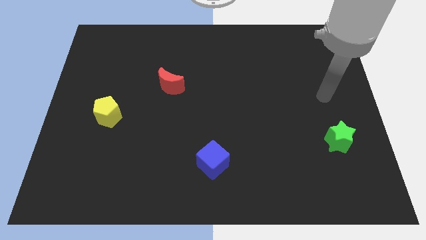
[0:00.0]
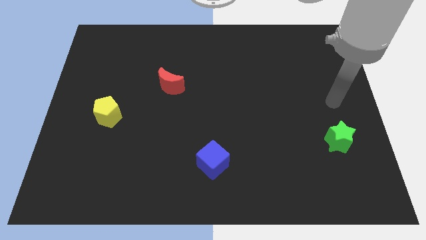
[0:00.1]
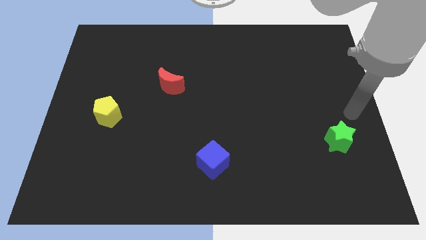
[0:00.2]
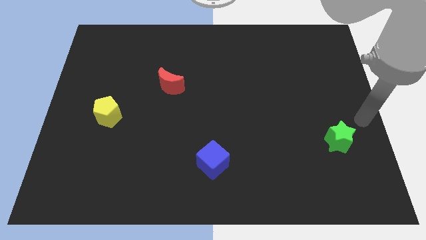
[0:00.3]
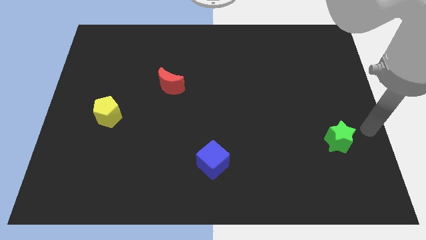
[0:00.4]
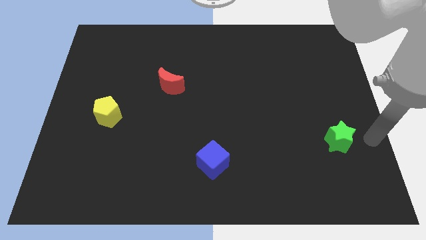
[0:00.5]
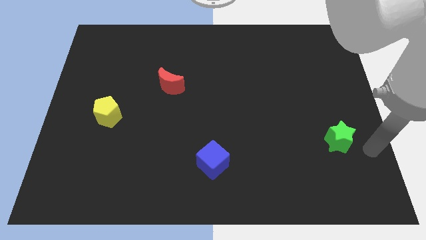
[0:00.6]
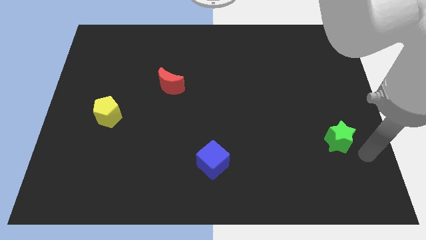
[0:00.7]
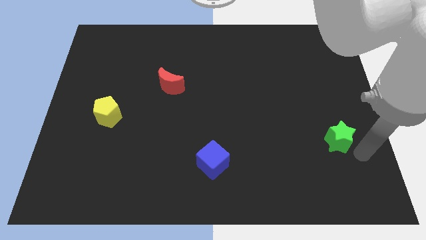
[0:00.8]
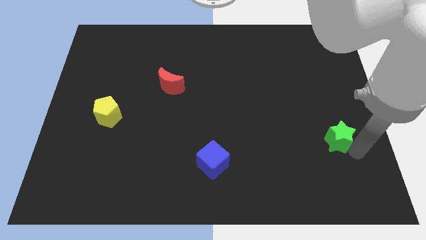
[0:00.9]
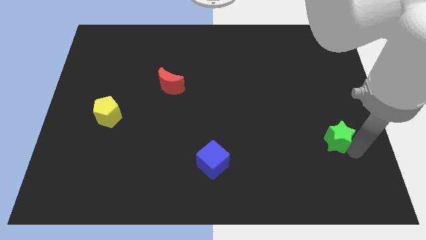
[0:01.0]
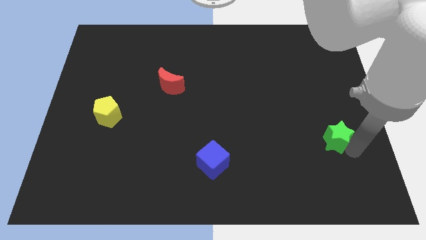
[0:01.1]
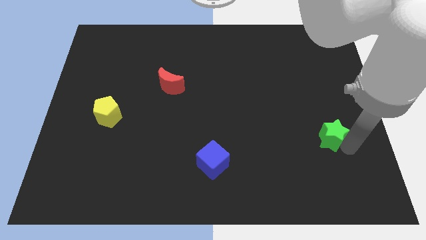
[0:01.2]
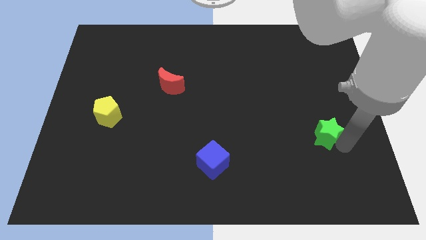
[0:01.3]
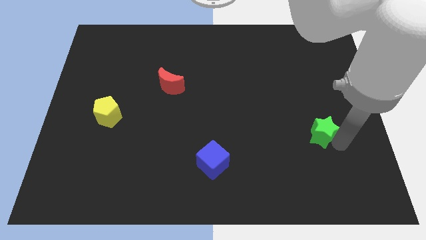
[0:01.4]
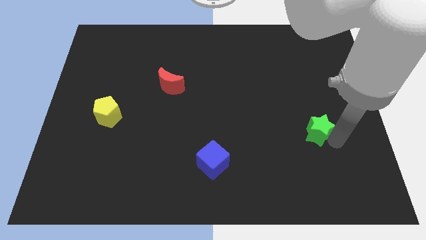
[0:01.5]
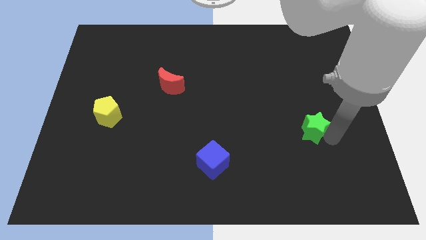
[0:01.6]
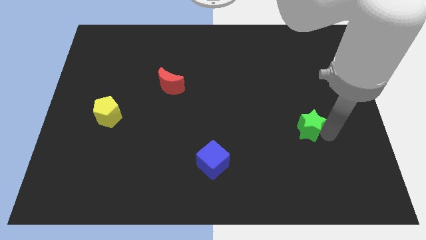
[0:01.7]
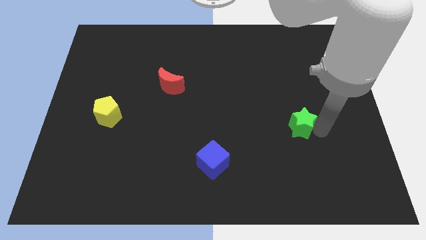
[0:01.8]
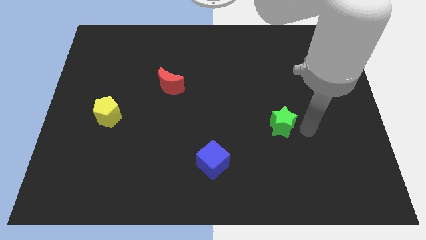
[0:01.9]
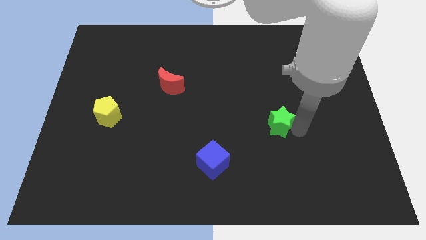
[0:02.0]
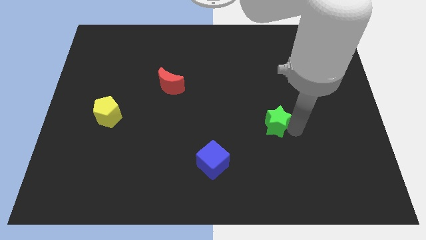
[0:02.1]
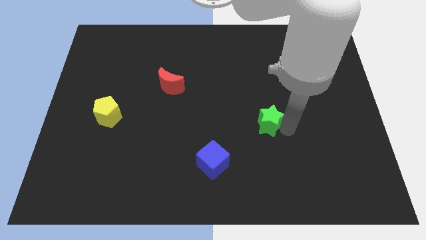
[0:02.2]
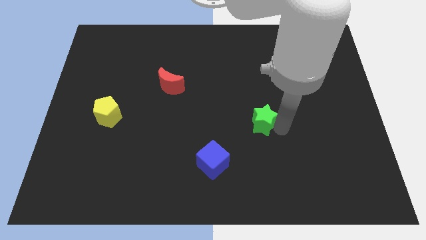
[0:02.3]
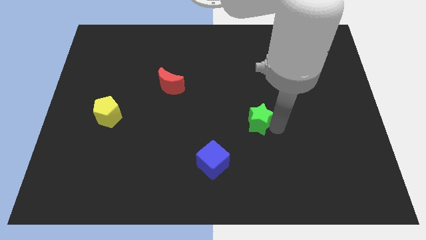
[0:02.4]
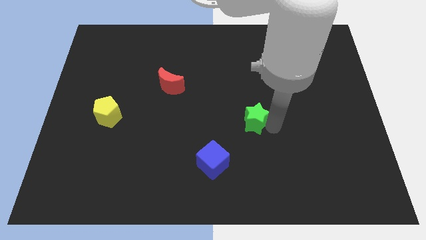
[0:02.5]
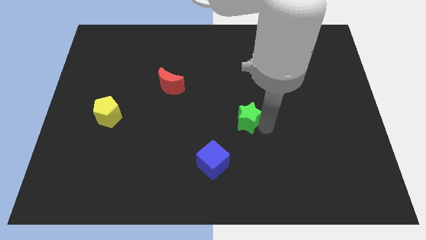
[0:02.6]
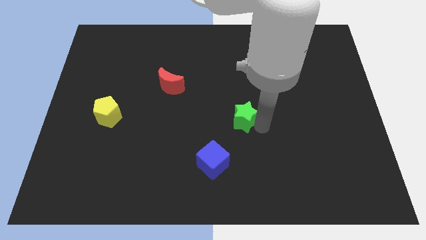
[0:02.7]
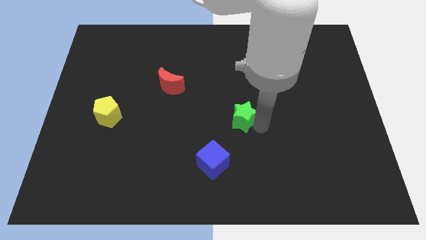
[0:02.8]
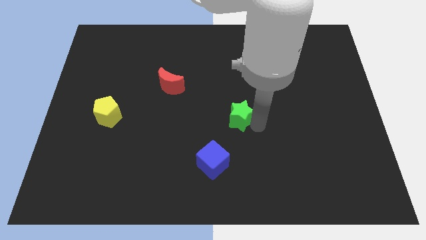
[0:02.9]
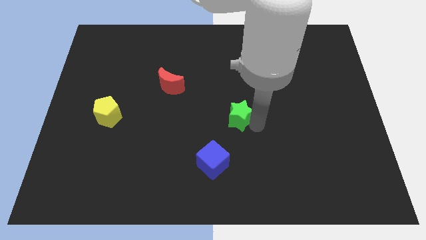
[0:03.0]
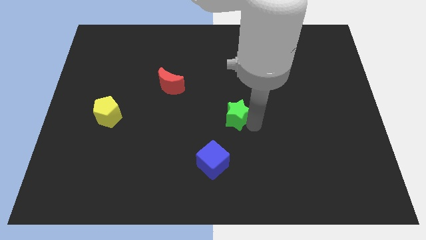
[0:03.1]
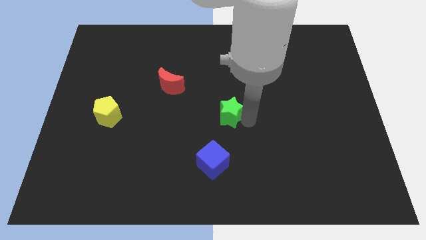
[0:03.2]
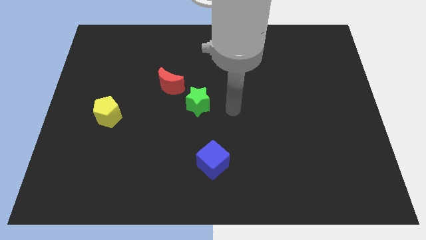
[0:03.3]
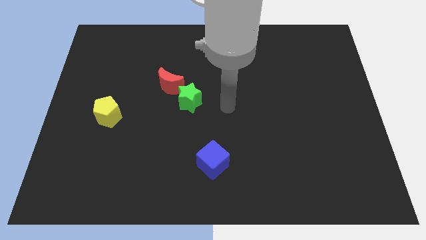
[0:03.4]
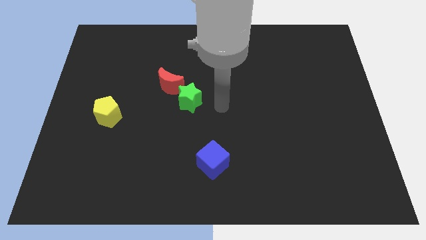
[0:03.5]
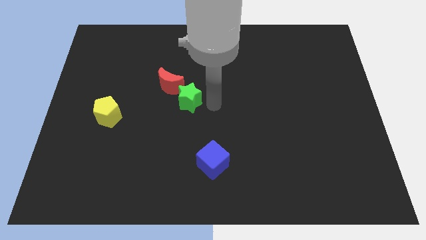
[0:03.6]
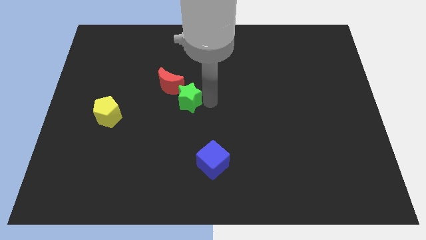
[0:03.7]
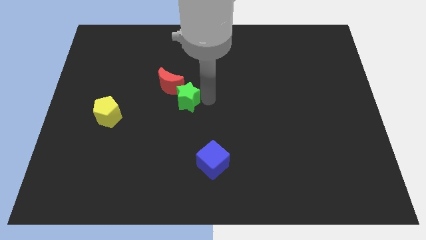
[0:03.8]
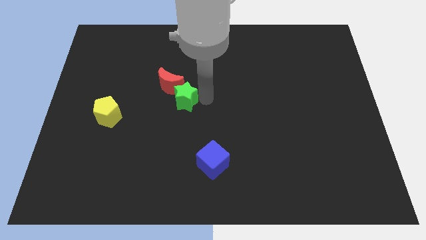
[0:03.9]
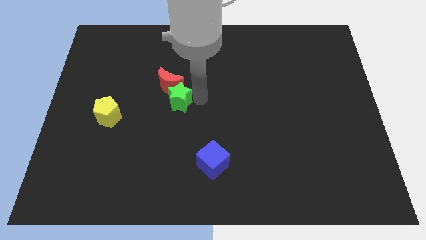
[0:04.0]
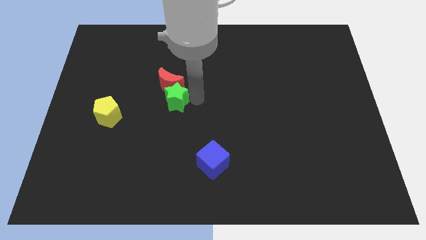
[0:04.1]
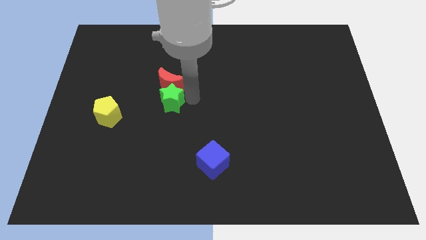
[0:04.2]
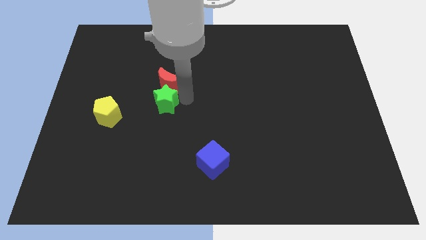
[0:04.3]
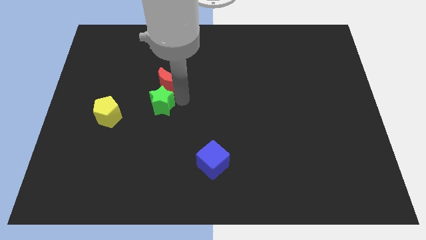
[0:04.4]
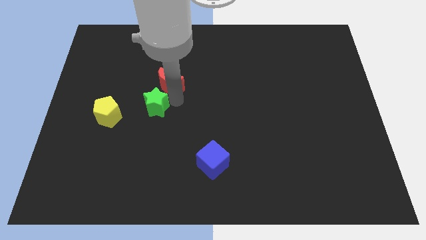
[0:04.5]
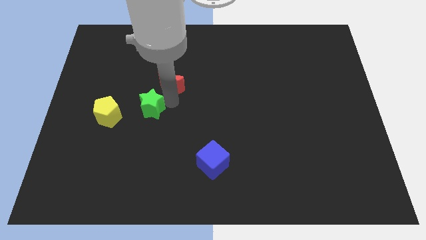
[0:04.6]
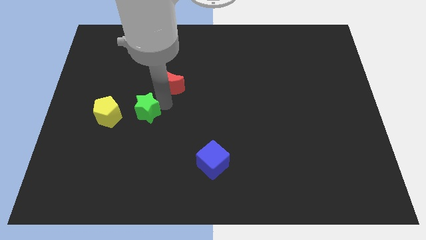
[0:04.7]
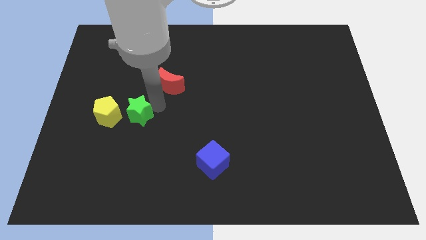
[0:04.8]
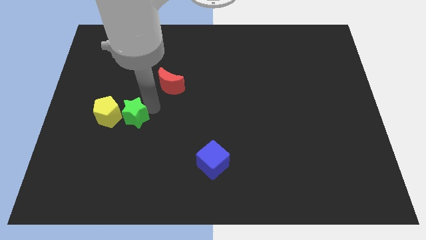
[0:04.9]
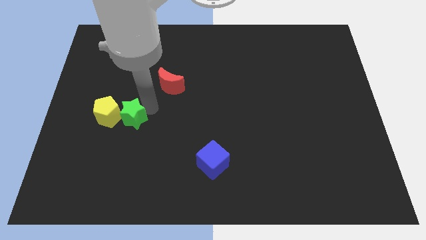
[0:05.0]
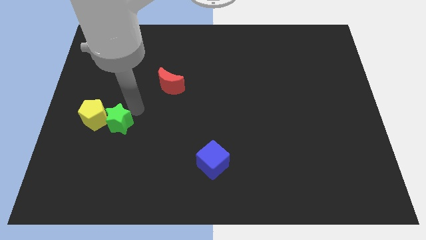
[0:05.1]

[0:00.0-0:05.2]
slide the green block towards the pentagon

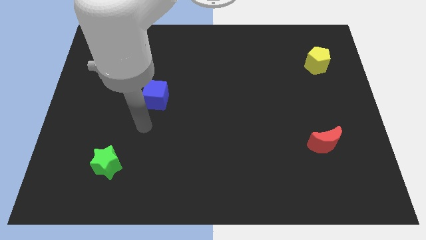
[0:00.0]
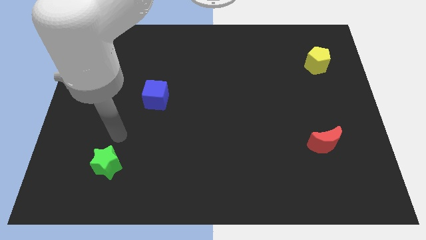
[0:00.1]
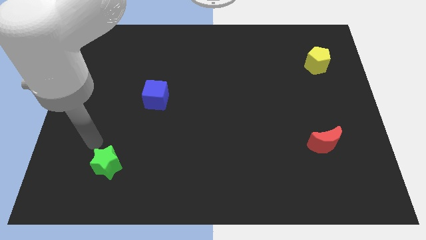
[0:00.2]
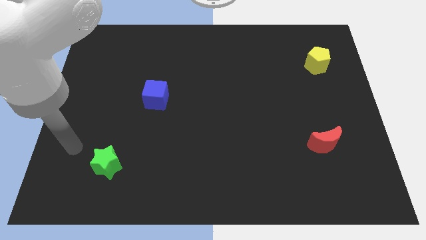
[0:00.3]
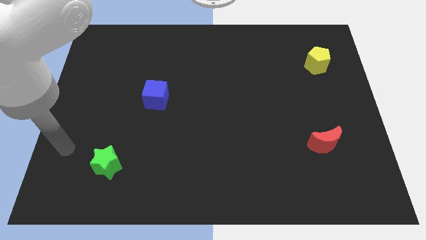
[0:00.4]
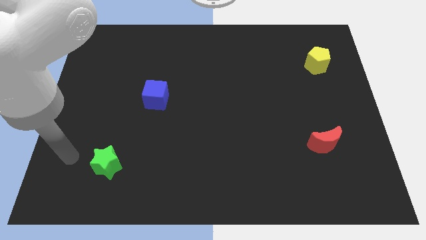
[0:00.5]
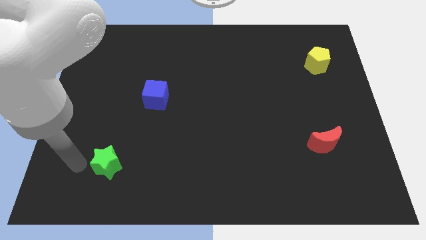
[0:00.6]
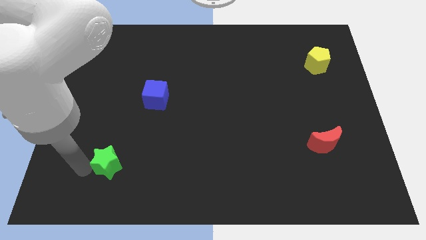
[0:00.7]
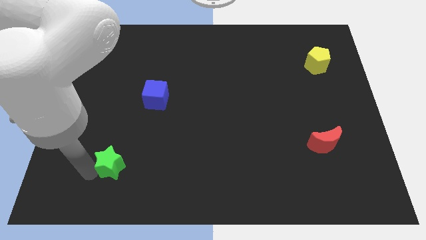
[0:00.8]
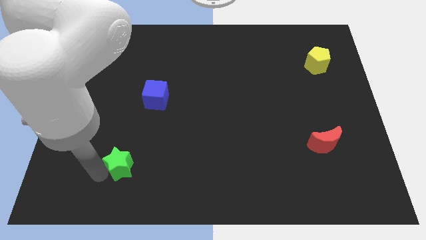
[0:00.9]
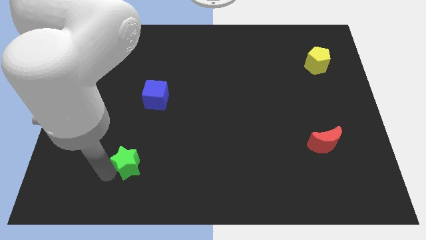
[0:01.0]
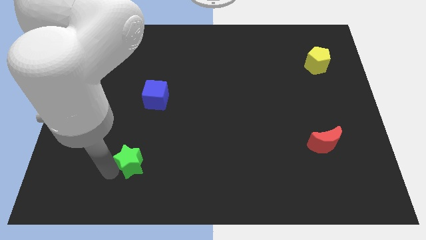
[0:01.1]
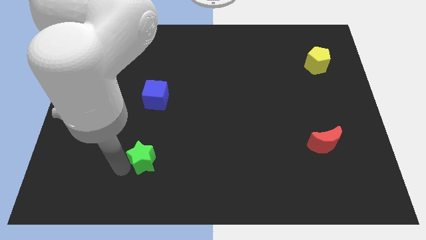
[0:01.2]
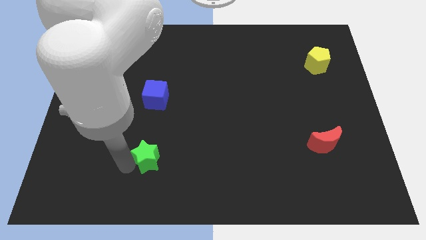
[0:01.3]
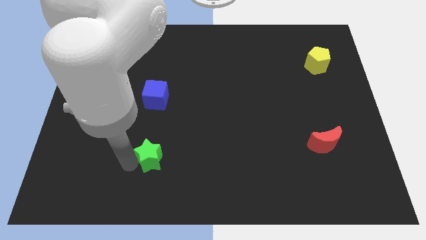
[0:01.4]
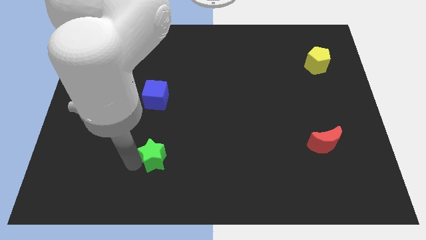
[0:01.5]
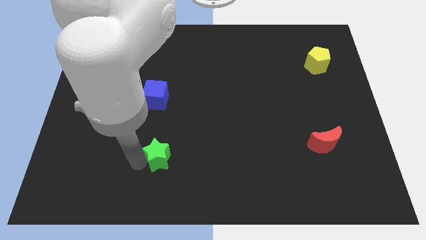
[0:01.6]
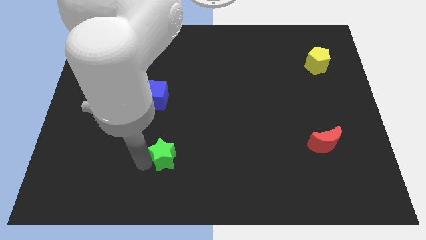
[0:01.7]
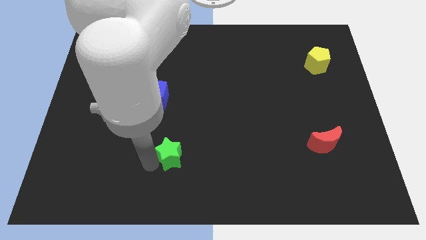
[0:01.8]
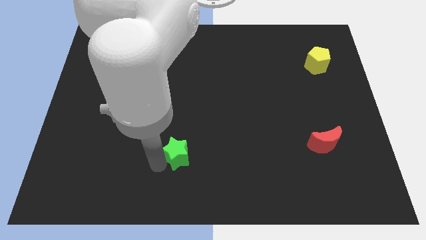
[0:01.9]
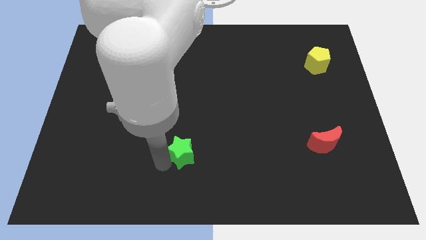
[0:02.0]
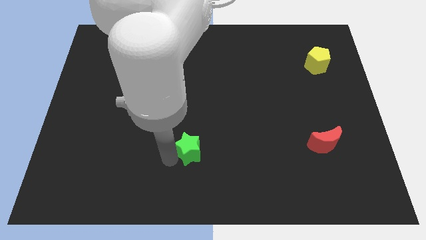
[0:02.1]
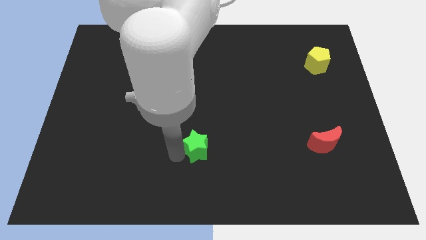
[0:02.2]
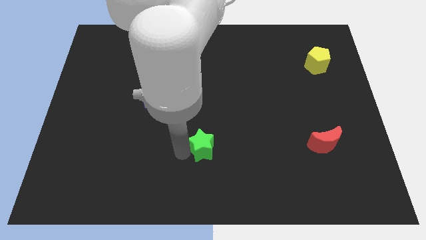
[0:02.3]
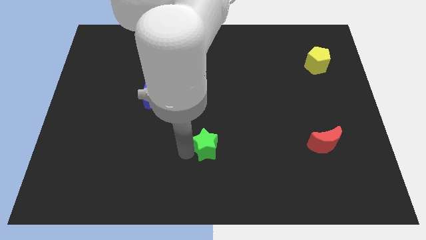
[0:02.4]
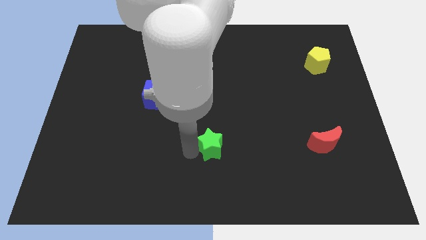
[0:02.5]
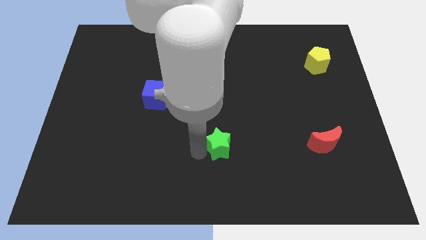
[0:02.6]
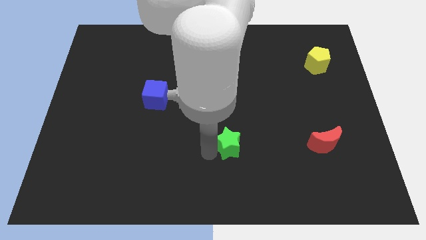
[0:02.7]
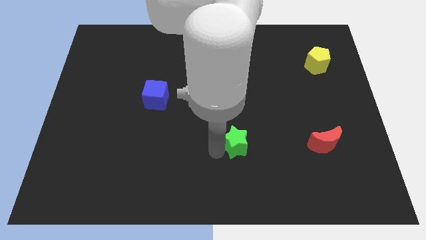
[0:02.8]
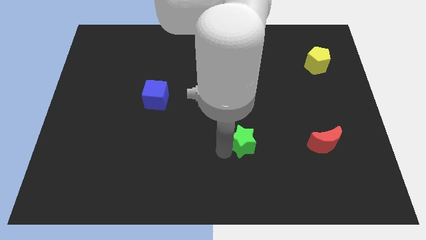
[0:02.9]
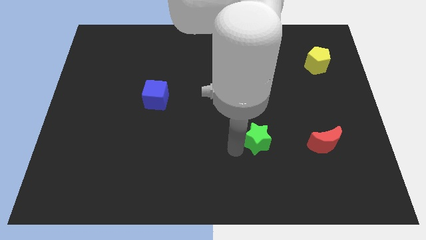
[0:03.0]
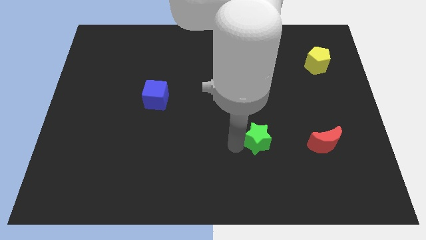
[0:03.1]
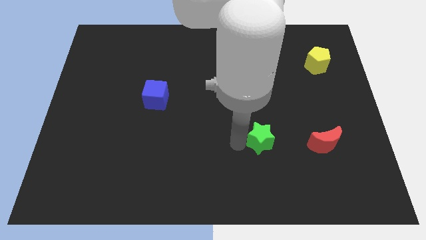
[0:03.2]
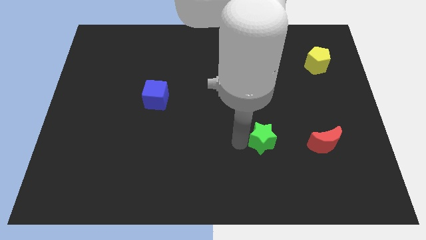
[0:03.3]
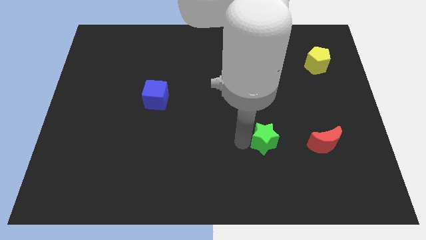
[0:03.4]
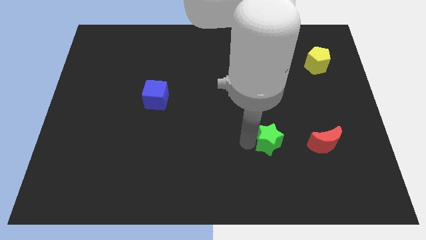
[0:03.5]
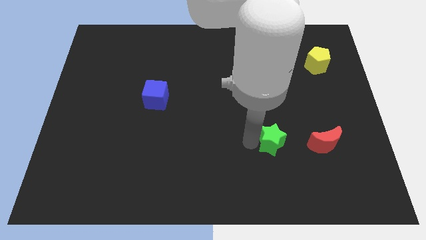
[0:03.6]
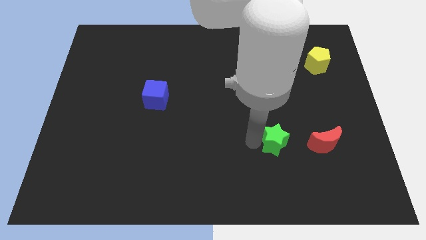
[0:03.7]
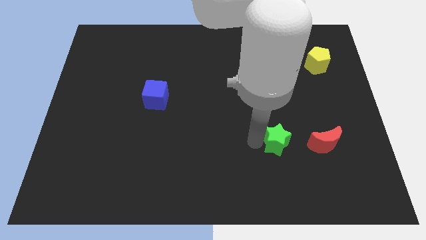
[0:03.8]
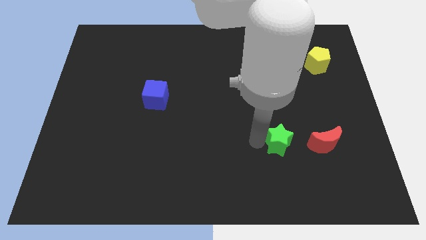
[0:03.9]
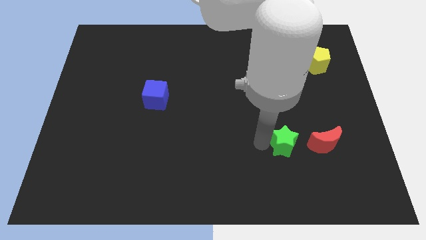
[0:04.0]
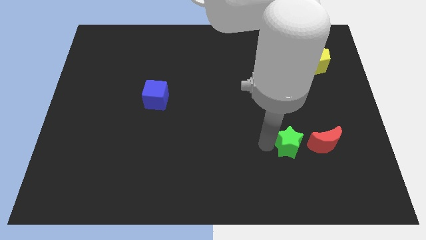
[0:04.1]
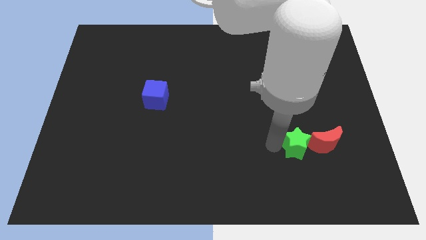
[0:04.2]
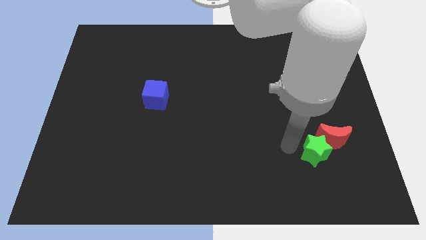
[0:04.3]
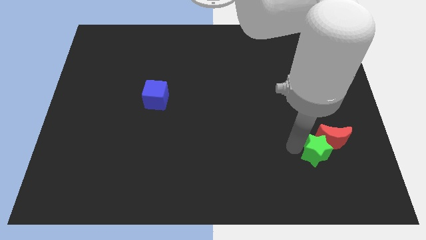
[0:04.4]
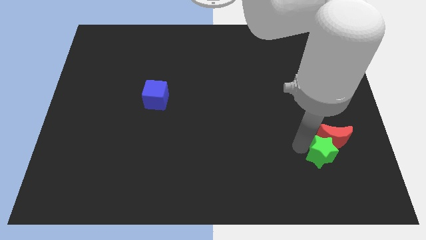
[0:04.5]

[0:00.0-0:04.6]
push the star to the red block
